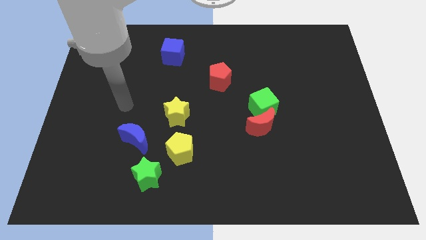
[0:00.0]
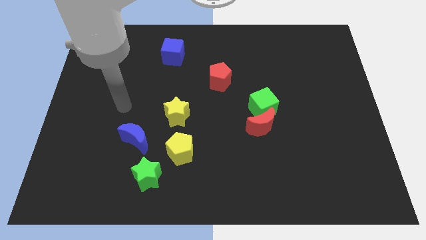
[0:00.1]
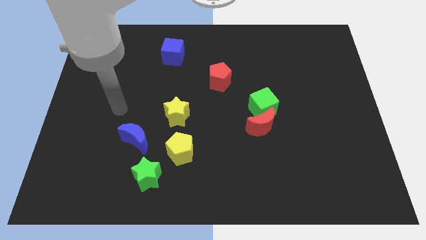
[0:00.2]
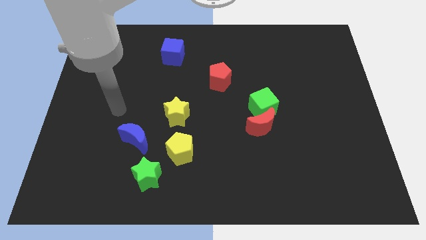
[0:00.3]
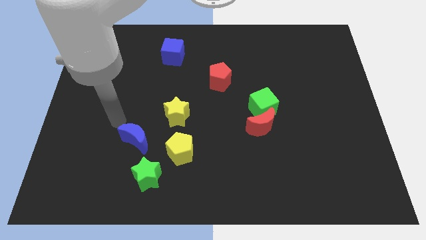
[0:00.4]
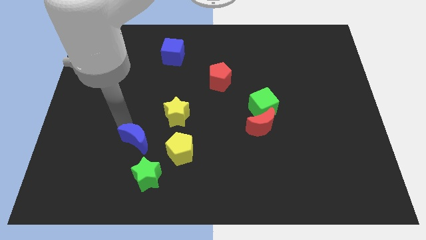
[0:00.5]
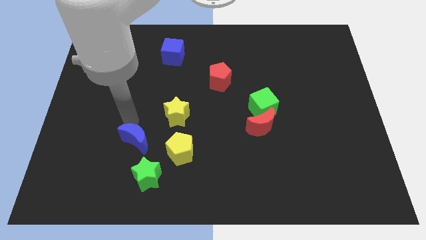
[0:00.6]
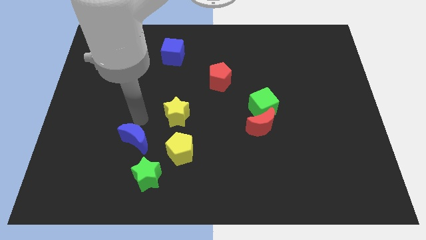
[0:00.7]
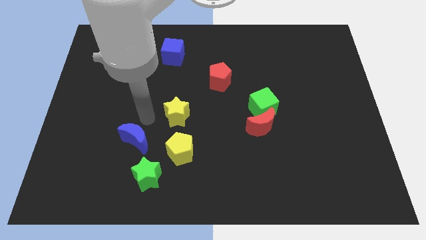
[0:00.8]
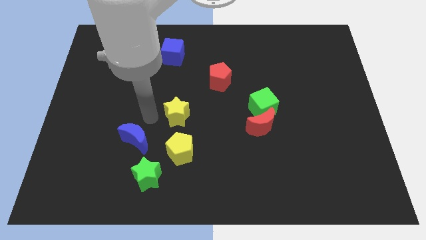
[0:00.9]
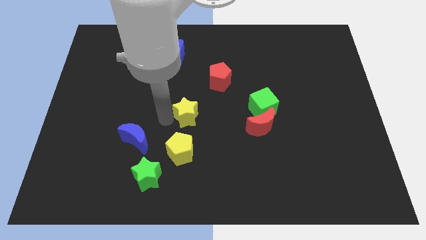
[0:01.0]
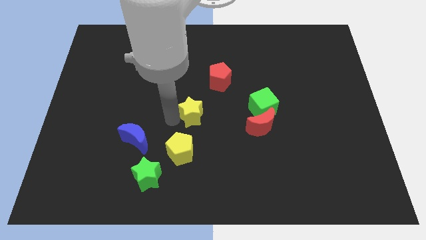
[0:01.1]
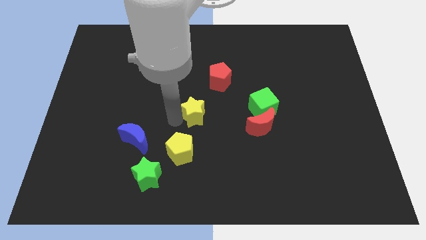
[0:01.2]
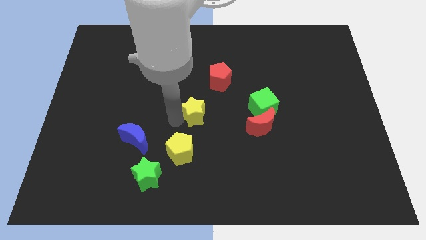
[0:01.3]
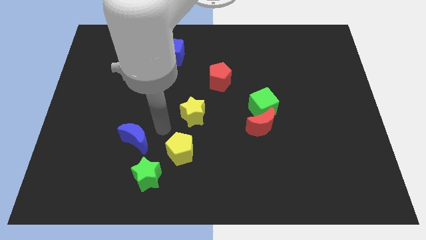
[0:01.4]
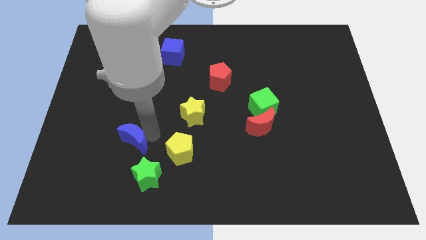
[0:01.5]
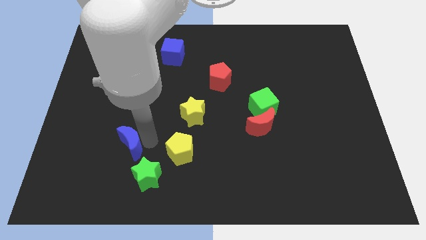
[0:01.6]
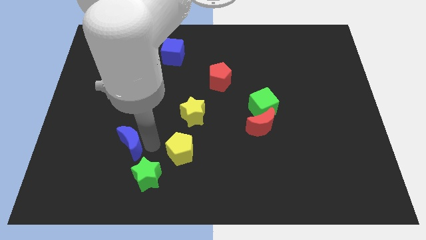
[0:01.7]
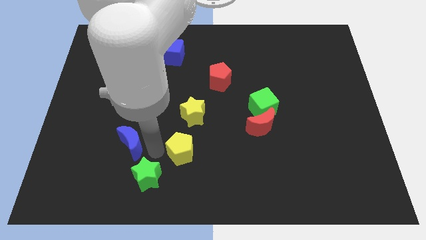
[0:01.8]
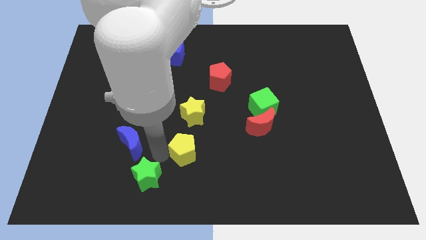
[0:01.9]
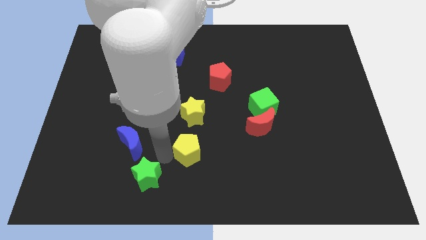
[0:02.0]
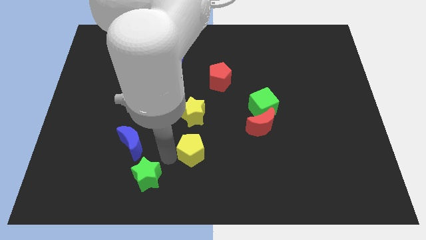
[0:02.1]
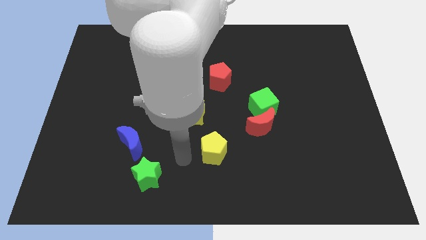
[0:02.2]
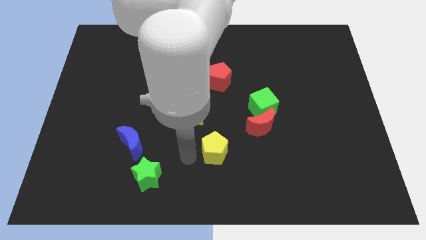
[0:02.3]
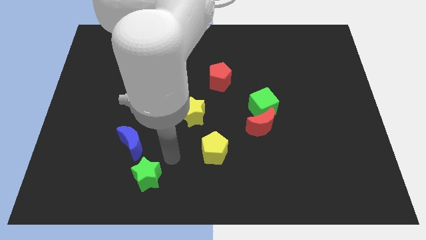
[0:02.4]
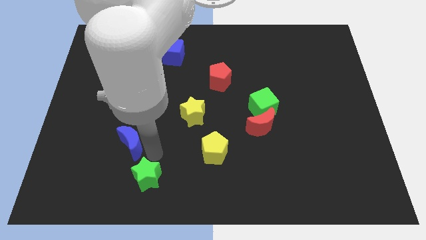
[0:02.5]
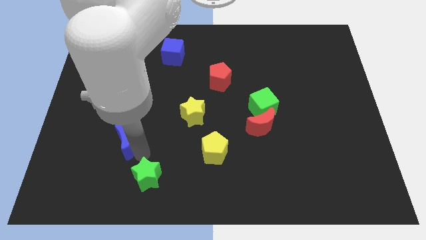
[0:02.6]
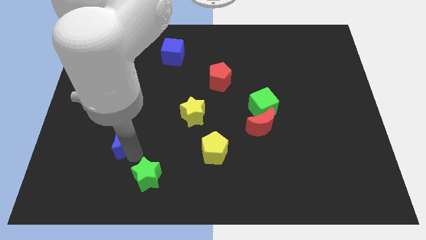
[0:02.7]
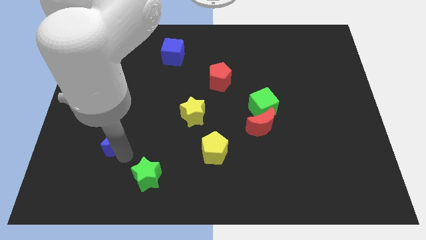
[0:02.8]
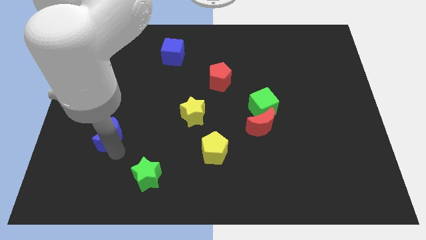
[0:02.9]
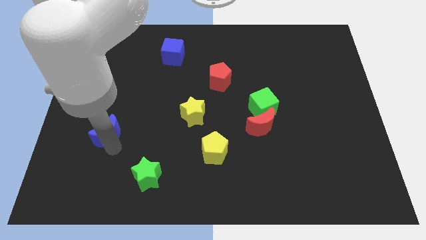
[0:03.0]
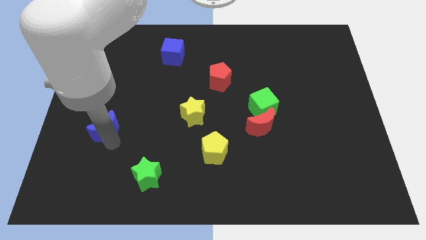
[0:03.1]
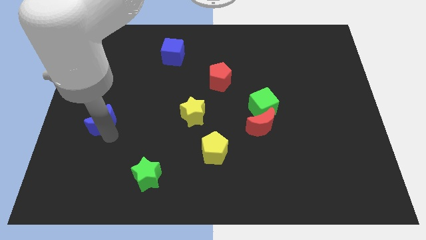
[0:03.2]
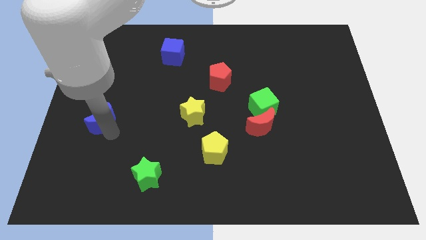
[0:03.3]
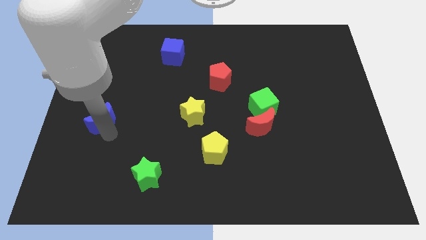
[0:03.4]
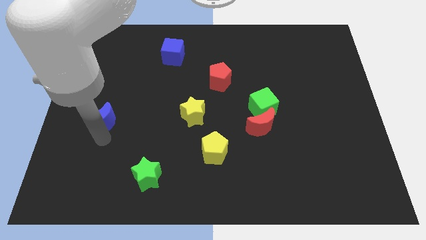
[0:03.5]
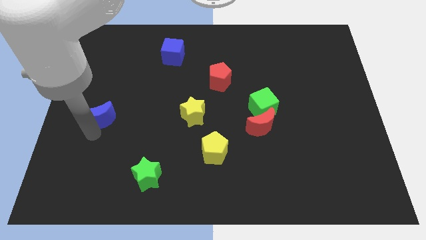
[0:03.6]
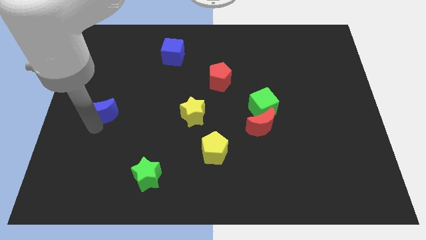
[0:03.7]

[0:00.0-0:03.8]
place the blue crescent horizontally to the left side of the yellow star

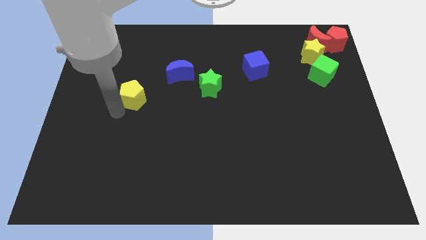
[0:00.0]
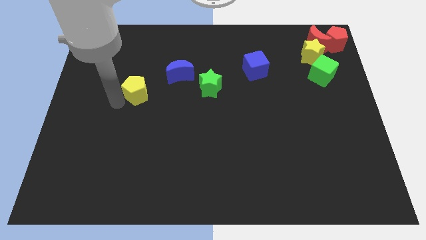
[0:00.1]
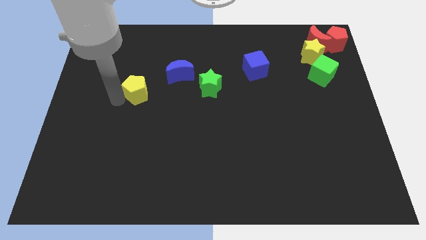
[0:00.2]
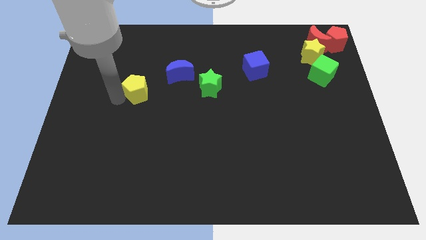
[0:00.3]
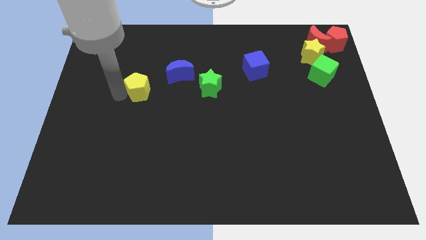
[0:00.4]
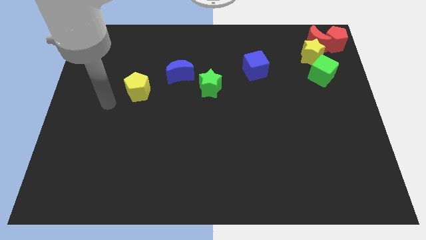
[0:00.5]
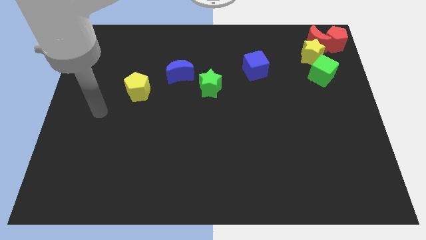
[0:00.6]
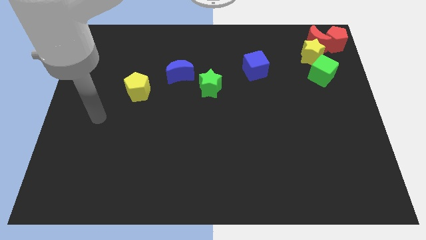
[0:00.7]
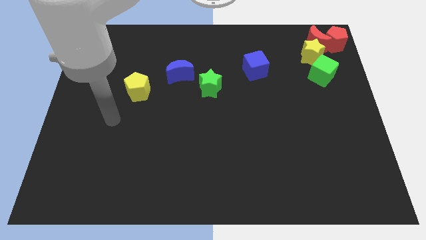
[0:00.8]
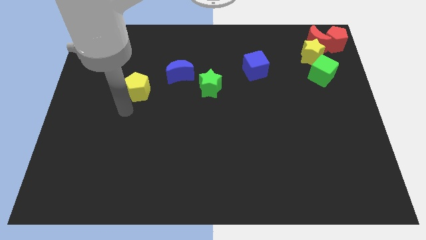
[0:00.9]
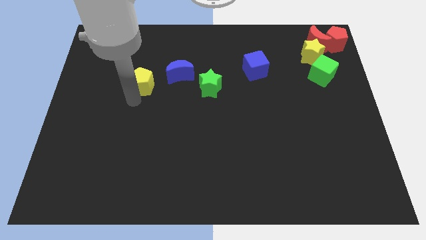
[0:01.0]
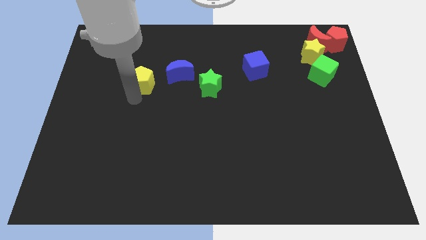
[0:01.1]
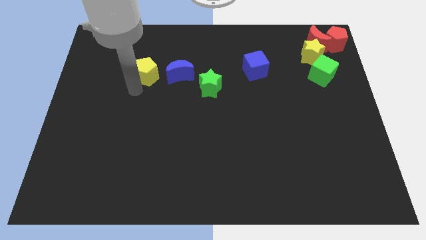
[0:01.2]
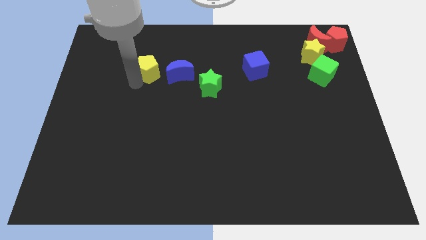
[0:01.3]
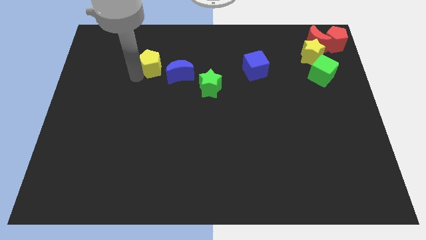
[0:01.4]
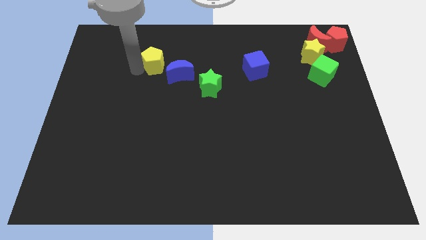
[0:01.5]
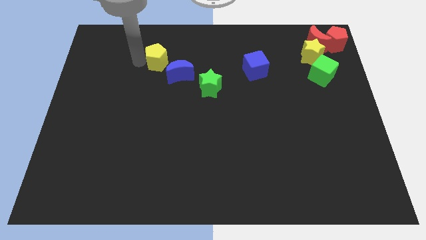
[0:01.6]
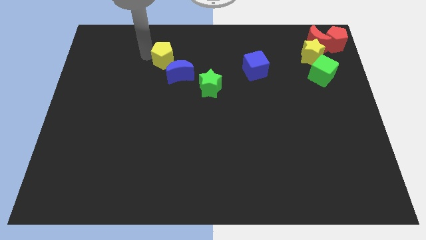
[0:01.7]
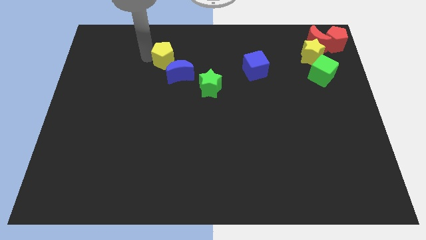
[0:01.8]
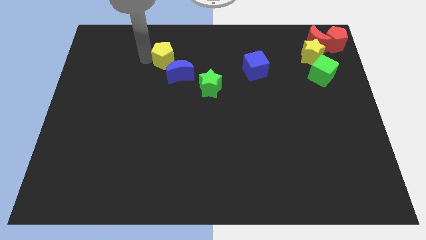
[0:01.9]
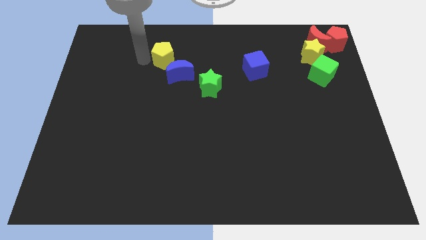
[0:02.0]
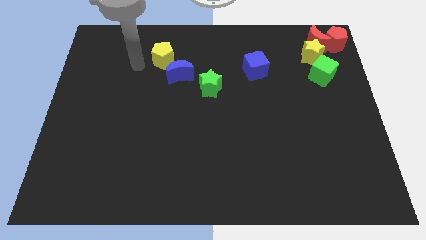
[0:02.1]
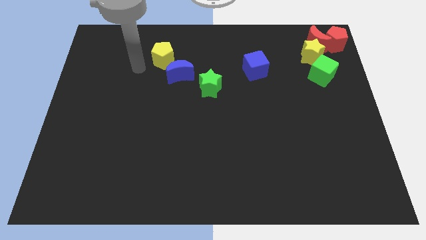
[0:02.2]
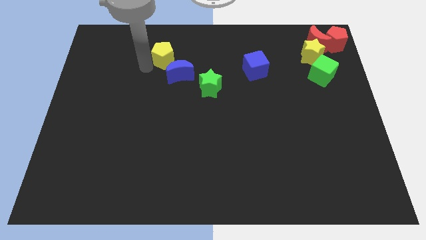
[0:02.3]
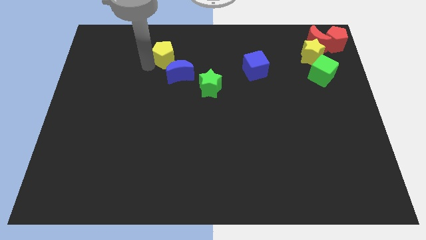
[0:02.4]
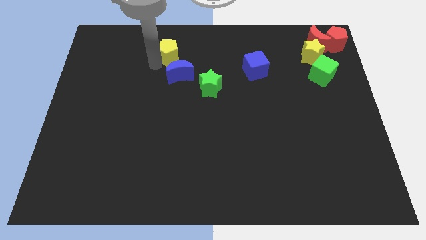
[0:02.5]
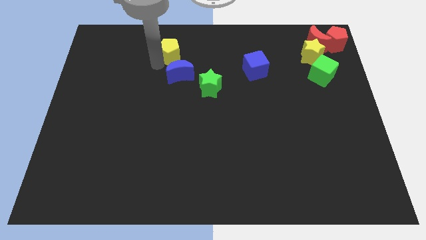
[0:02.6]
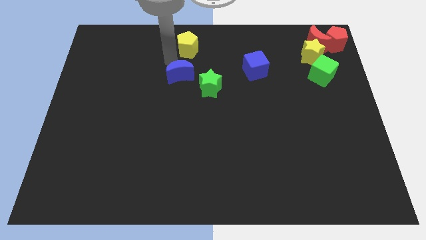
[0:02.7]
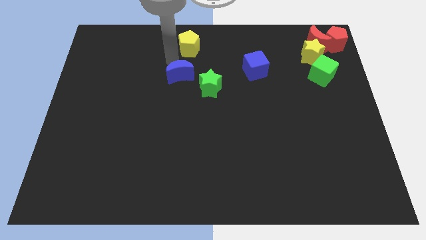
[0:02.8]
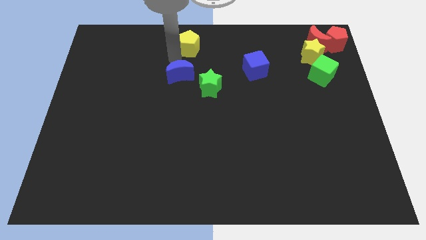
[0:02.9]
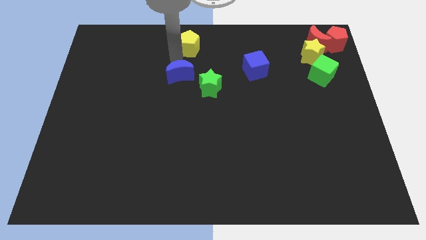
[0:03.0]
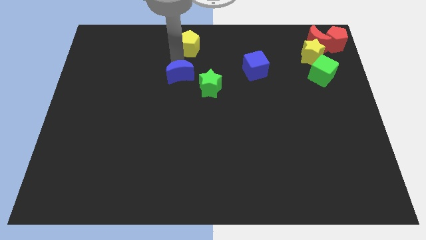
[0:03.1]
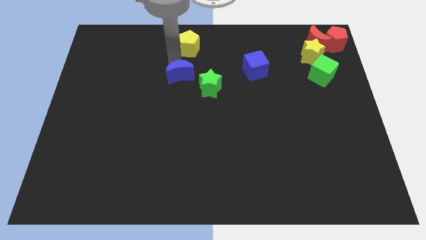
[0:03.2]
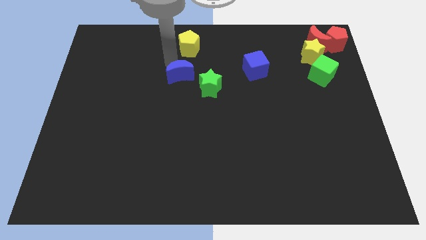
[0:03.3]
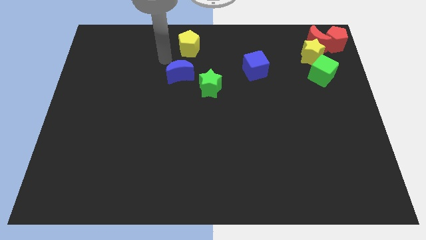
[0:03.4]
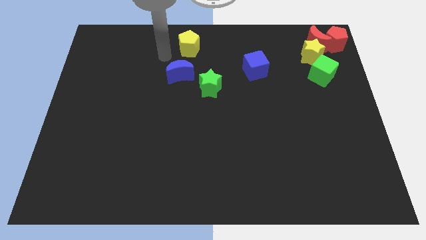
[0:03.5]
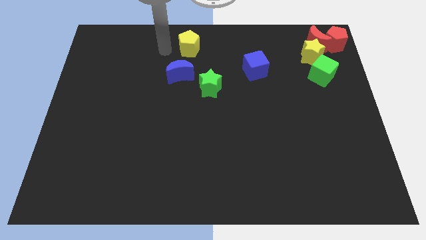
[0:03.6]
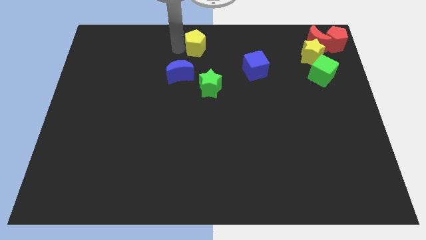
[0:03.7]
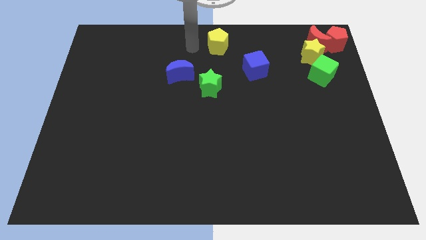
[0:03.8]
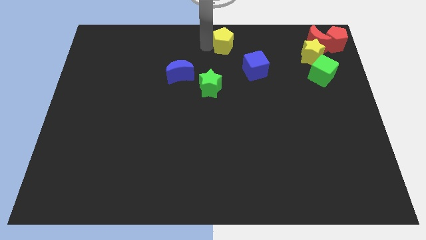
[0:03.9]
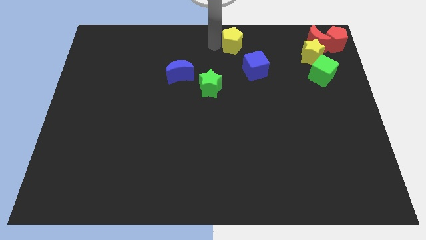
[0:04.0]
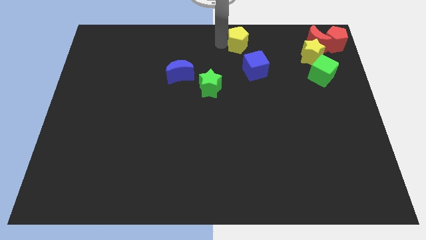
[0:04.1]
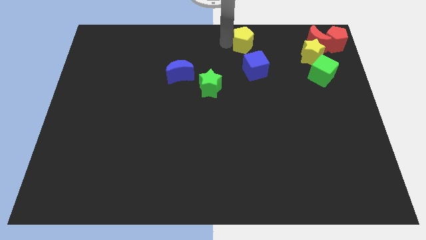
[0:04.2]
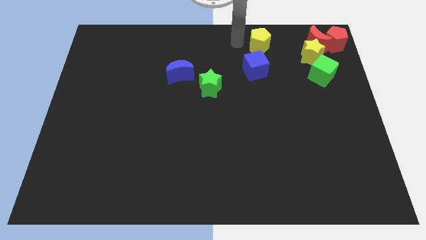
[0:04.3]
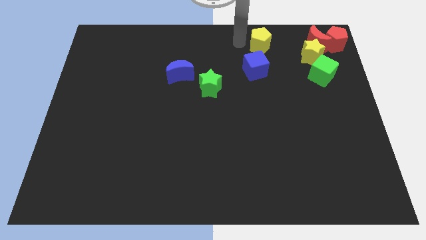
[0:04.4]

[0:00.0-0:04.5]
place the yellow pentagon above blue cube

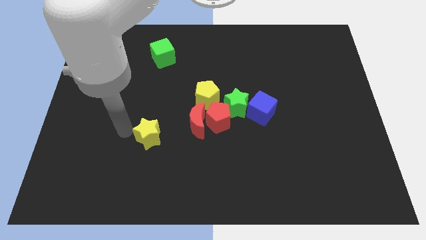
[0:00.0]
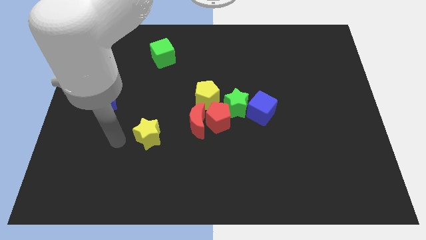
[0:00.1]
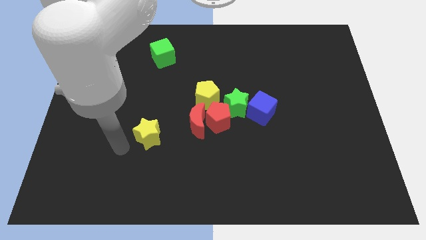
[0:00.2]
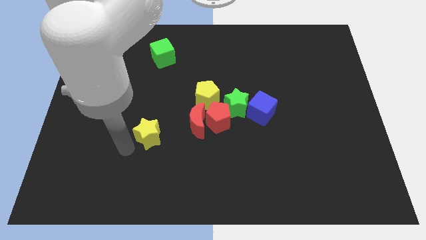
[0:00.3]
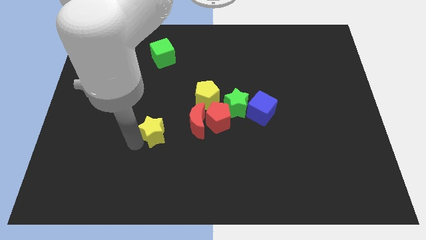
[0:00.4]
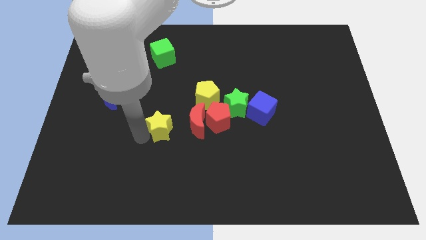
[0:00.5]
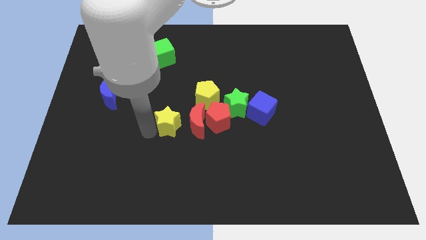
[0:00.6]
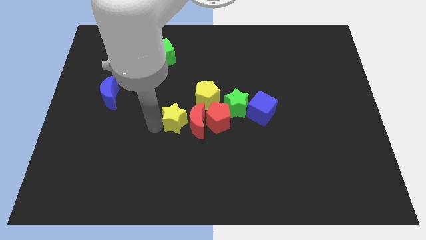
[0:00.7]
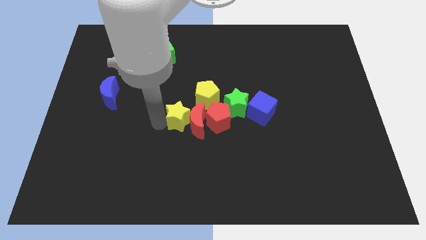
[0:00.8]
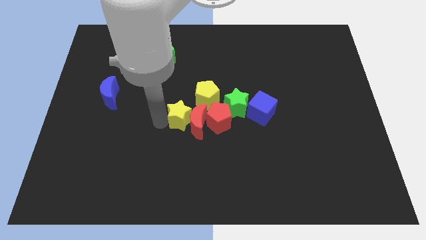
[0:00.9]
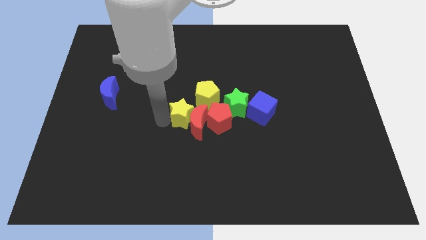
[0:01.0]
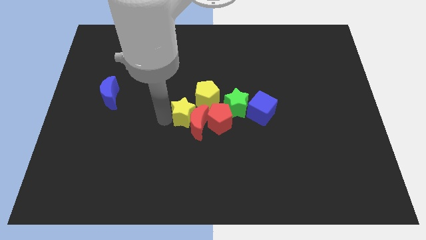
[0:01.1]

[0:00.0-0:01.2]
put the yellow star and red moon together
